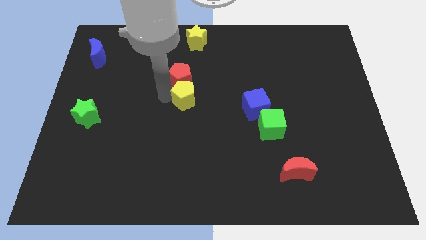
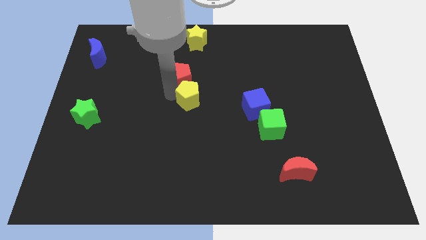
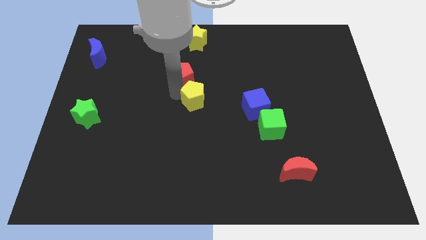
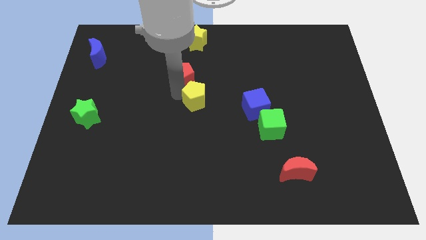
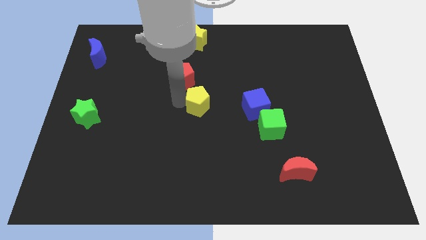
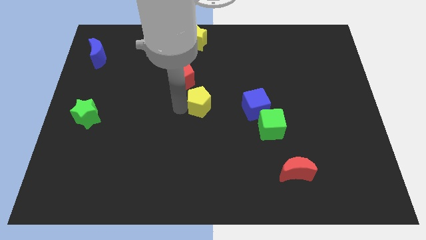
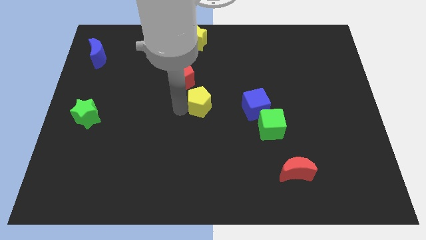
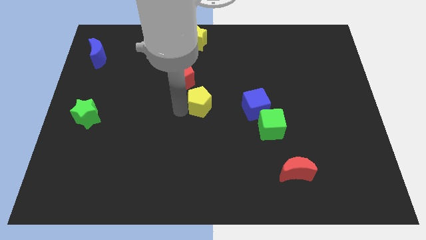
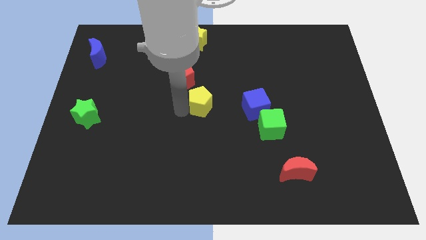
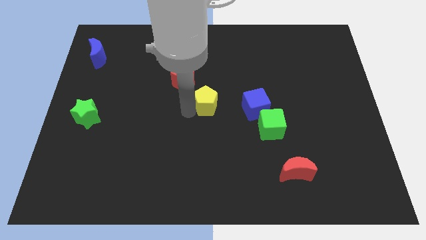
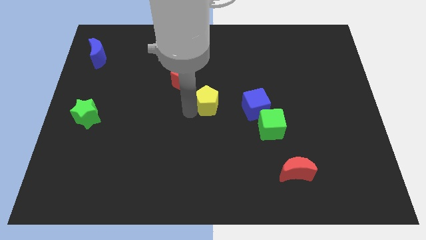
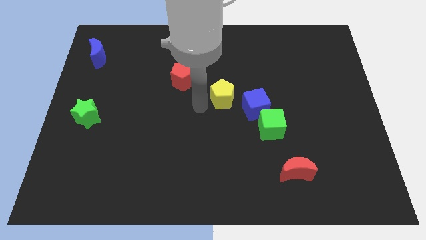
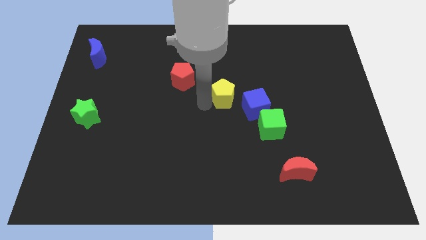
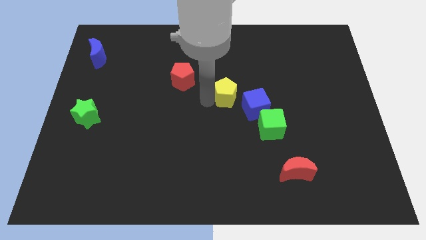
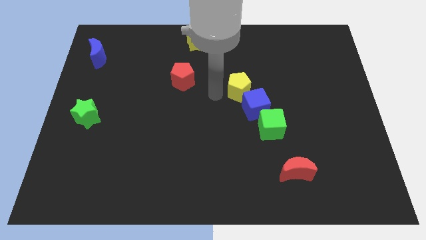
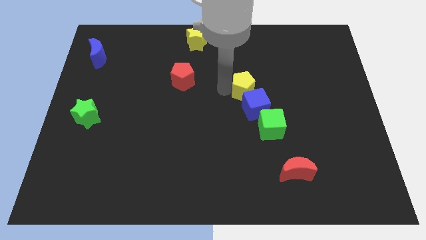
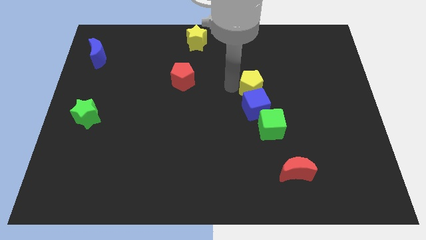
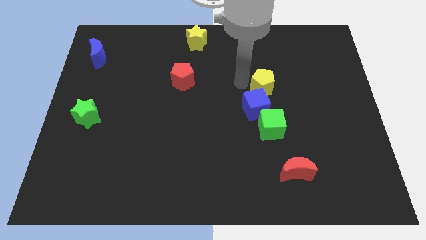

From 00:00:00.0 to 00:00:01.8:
move the yellow pentagon to the top side of the blue cube

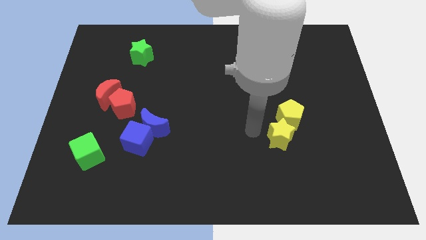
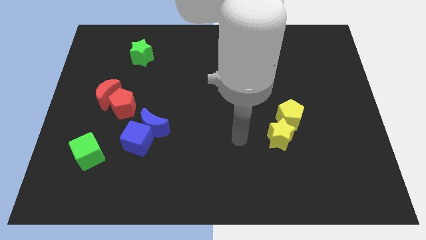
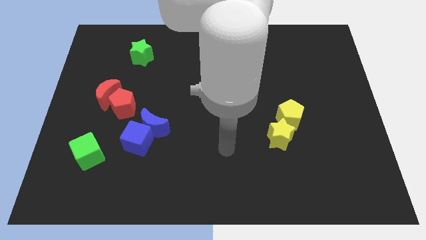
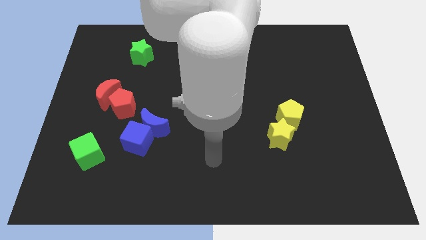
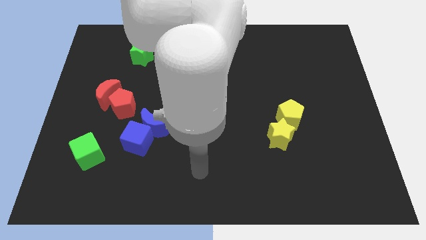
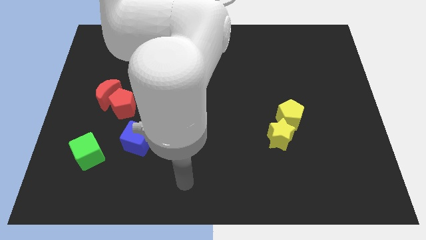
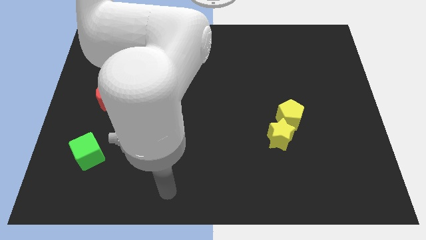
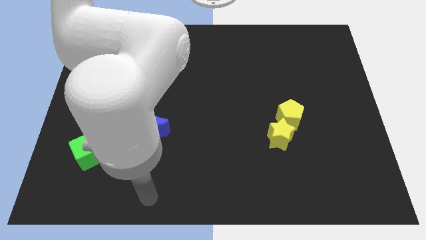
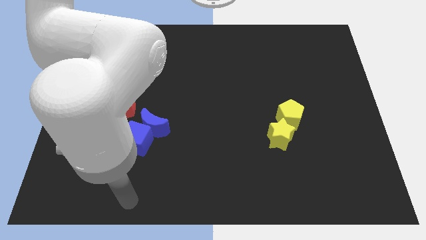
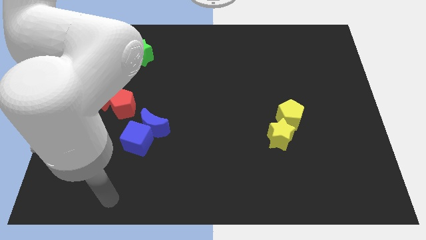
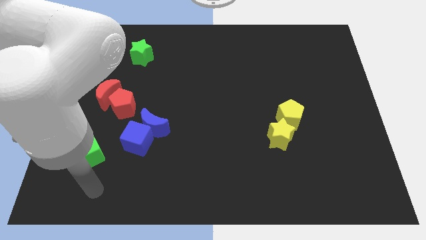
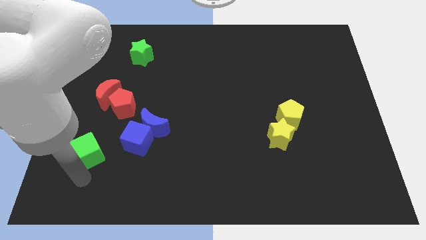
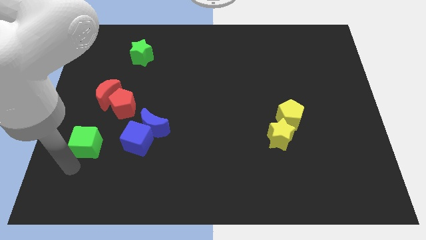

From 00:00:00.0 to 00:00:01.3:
place the arm below the green cube

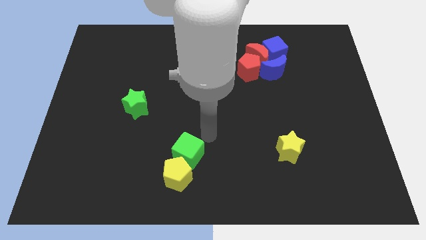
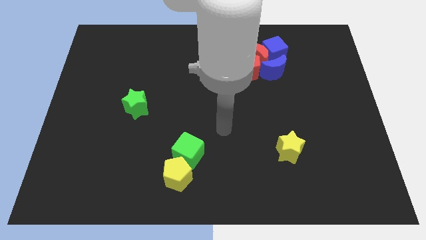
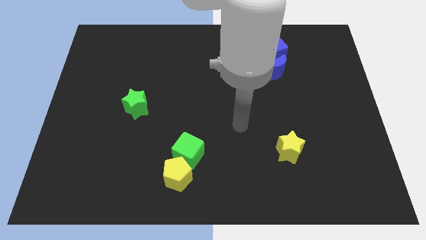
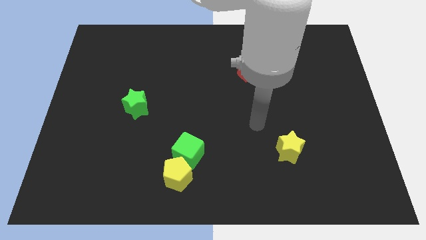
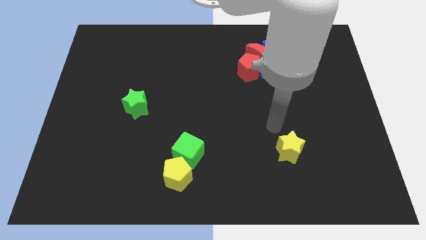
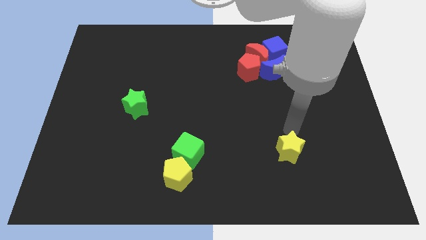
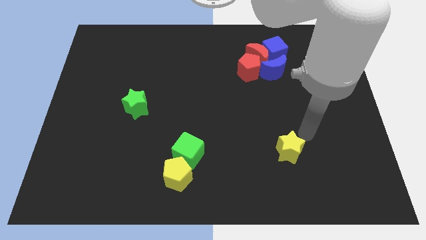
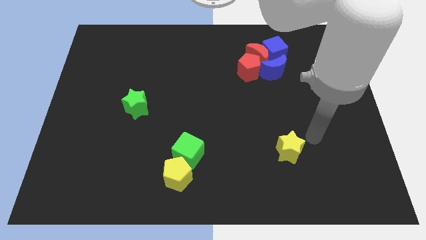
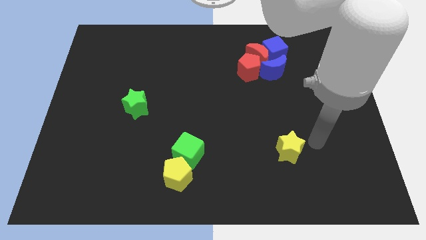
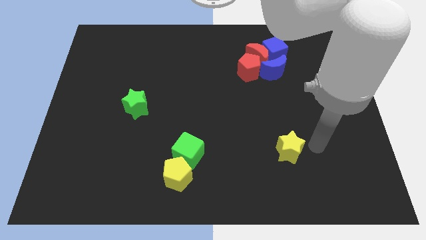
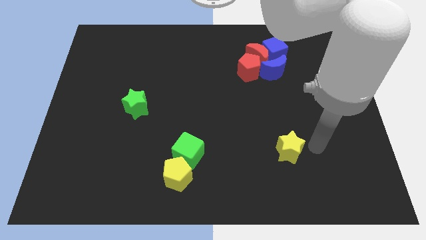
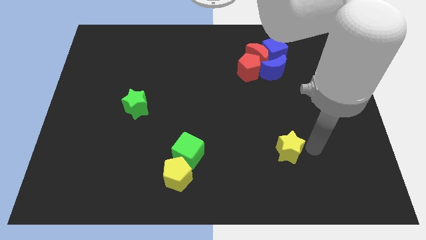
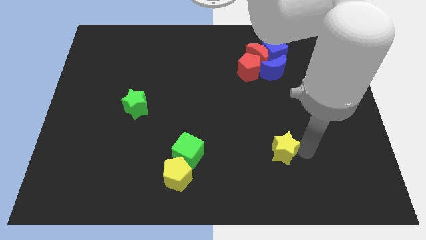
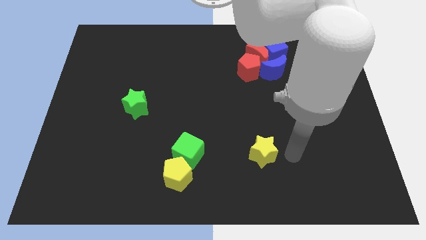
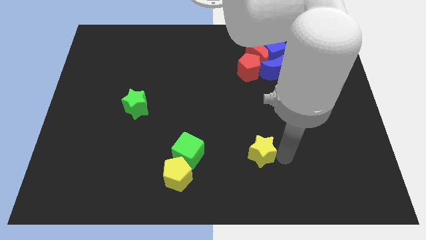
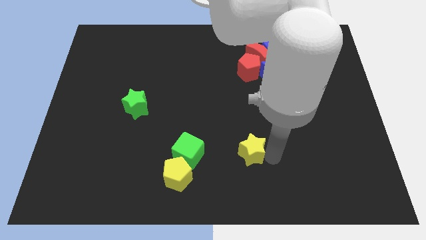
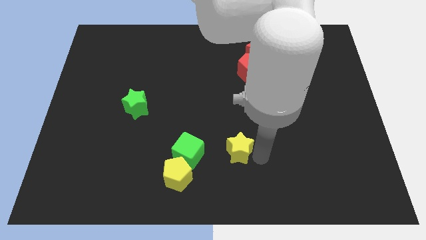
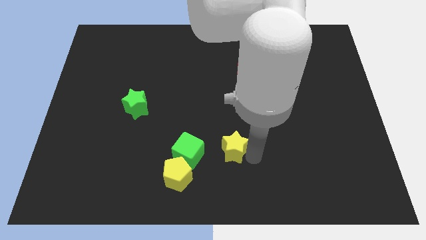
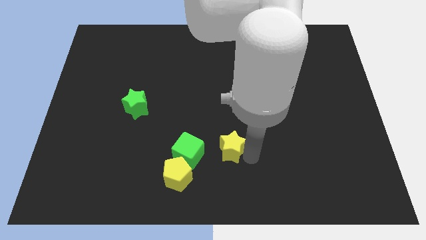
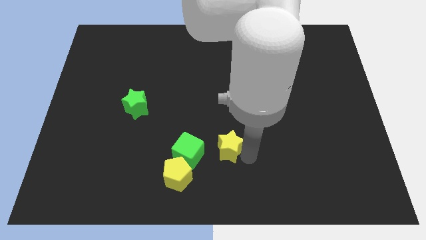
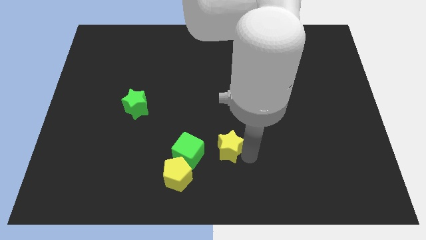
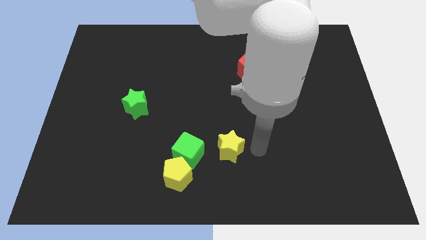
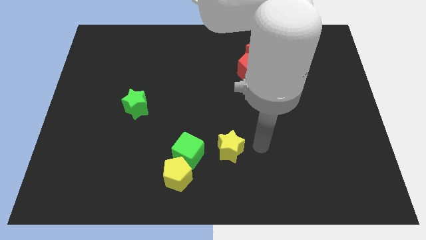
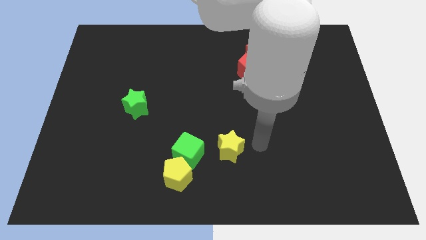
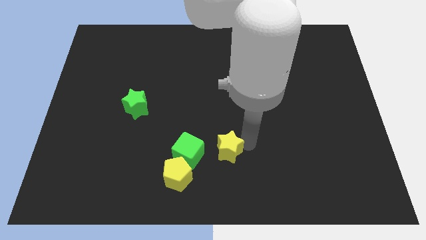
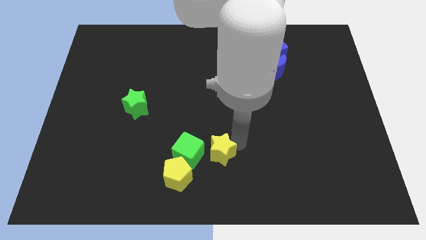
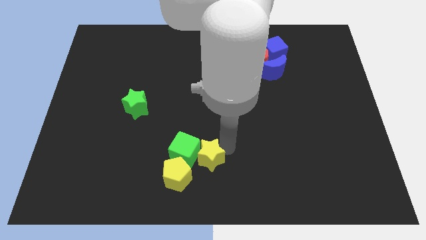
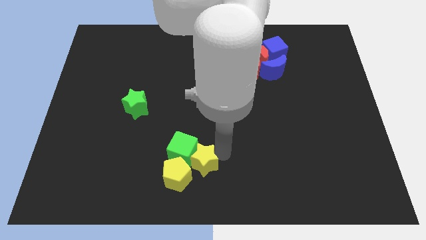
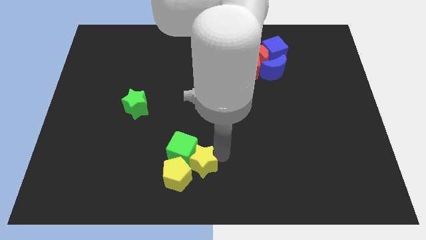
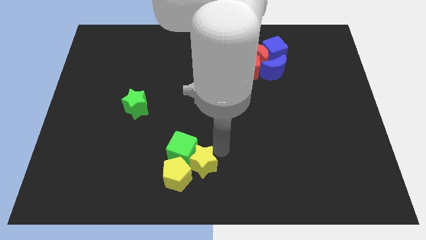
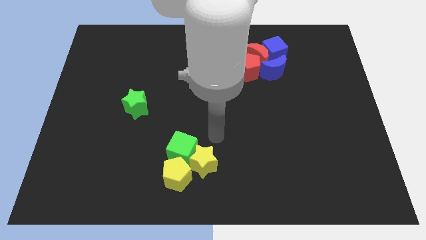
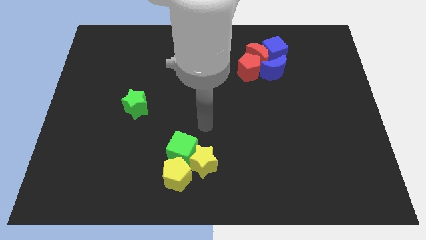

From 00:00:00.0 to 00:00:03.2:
push the yellow star diagonally bottom left to the red and the yellow blocks

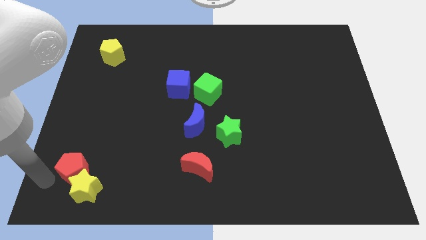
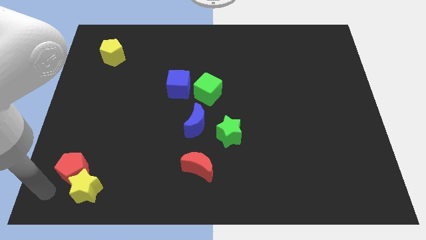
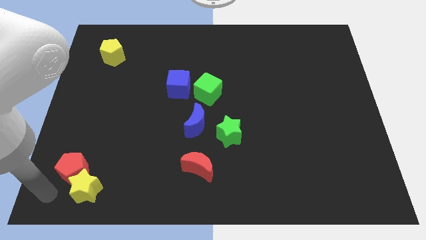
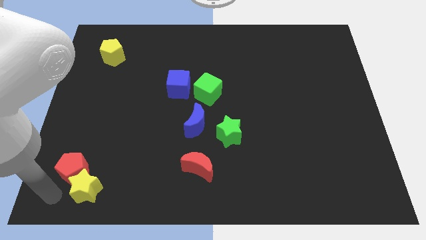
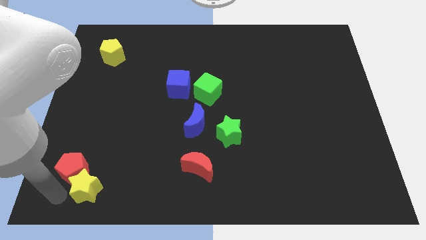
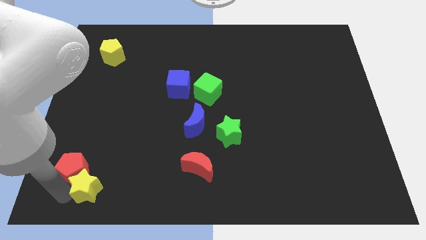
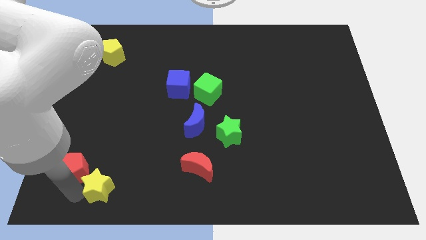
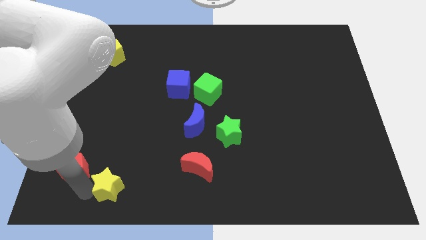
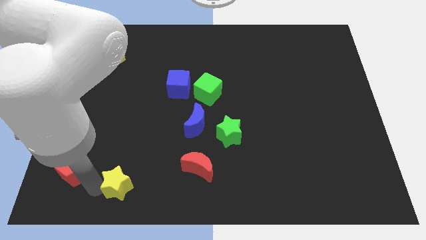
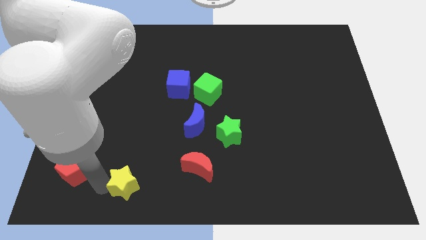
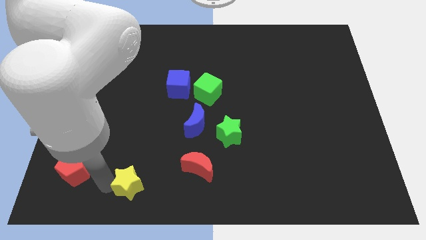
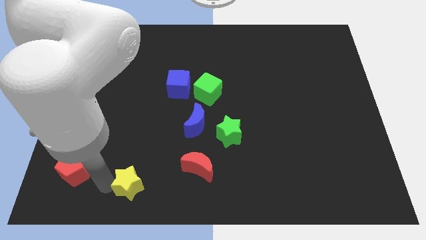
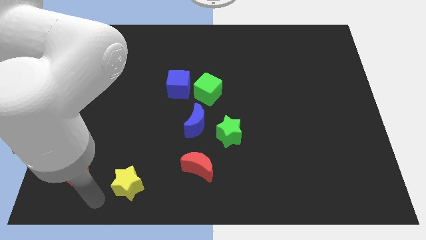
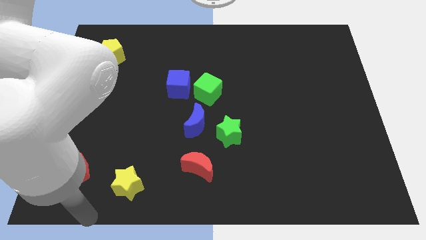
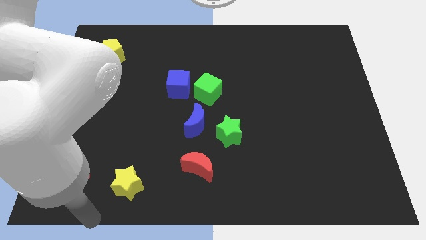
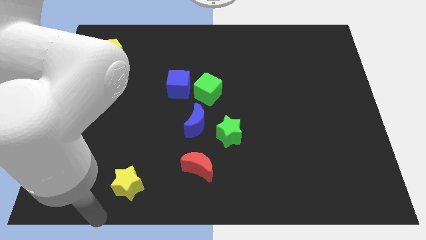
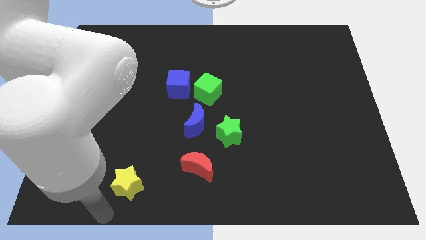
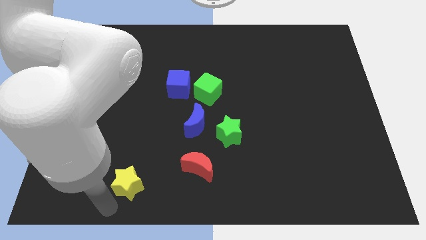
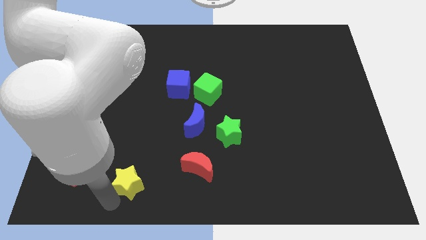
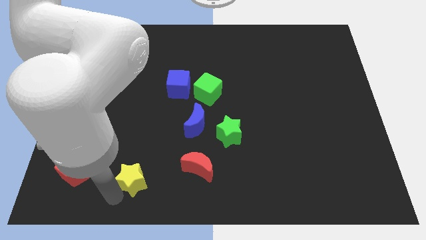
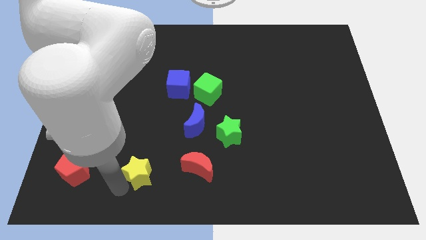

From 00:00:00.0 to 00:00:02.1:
move the yellow star at the left side of the red crescent

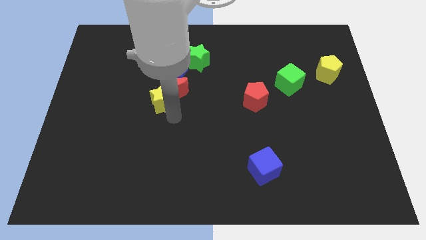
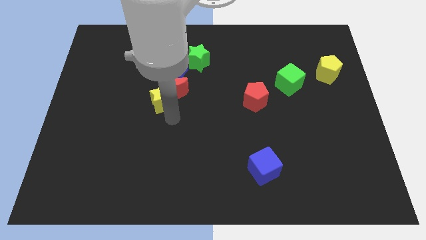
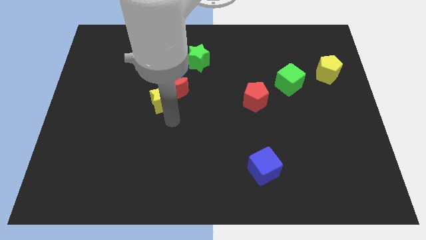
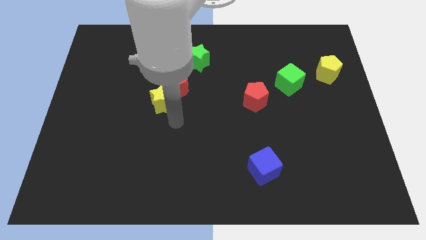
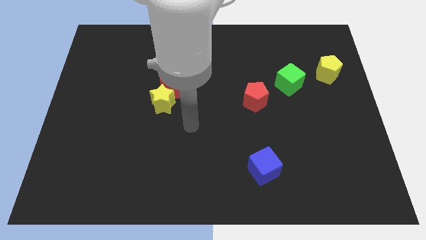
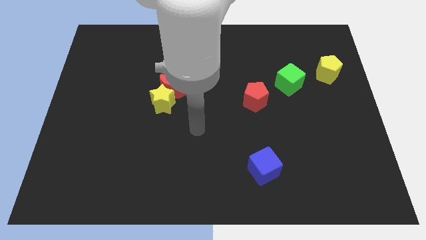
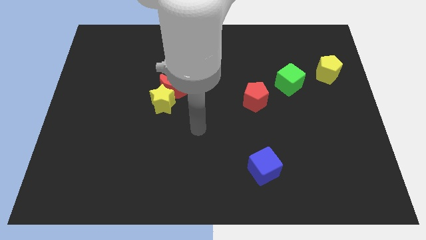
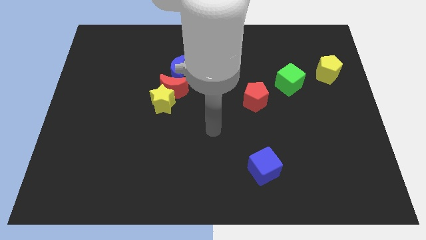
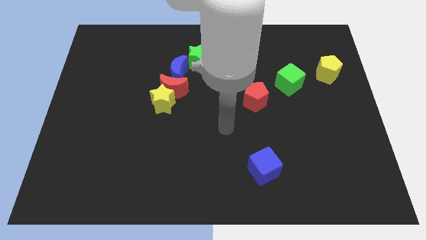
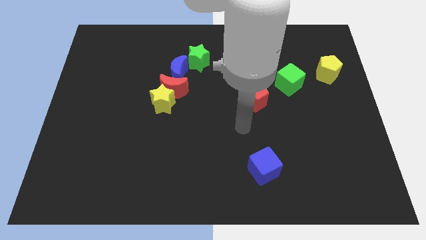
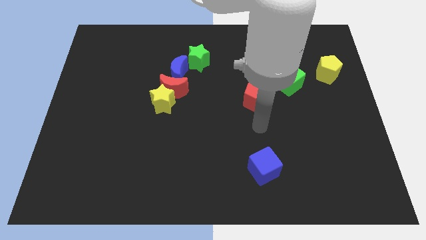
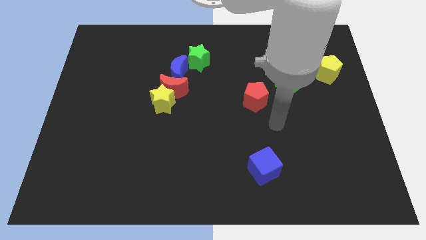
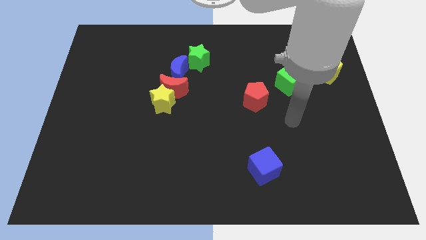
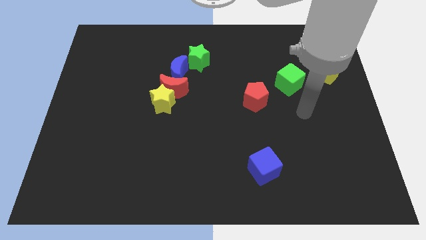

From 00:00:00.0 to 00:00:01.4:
move the arm away from the yellow star
